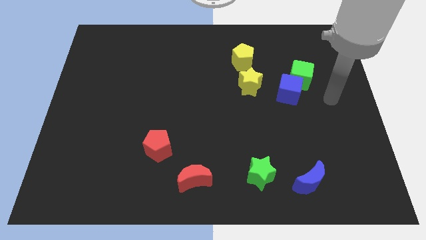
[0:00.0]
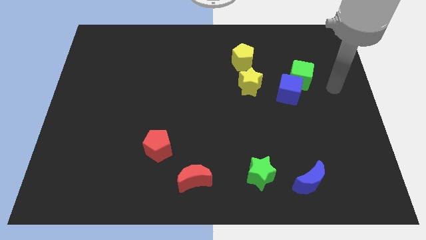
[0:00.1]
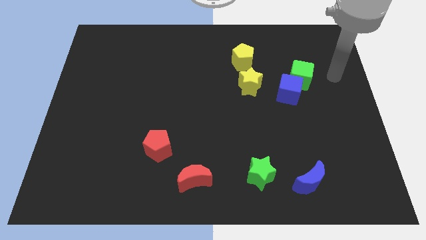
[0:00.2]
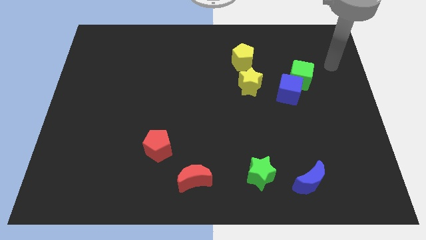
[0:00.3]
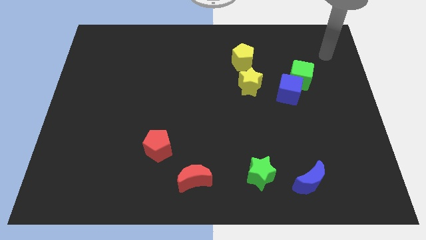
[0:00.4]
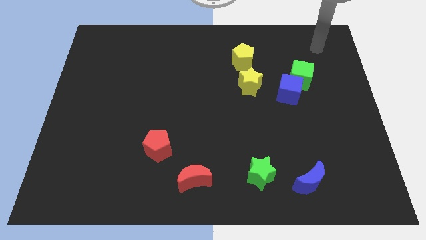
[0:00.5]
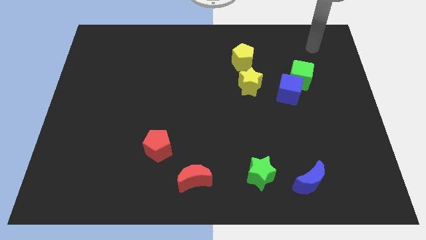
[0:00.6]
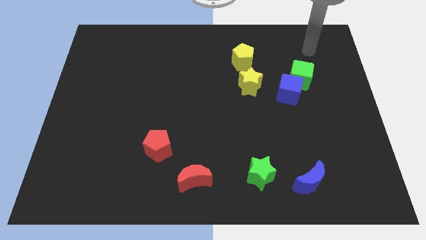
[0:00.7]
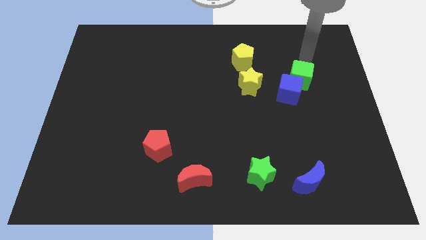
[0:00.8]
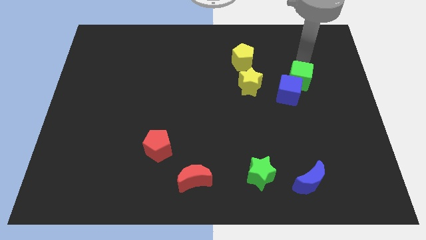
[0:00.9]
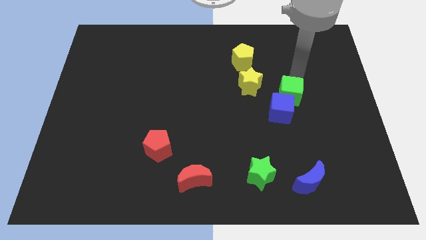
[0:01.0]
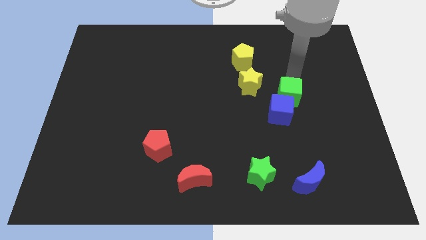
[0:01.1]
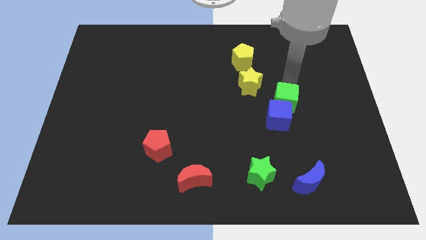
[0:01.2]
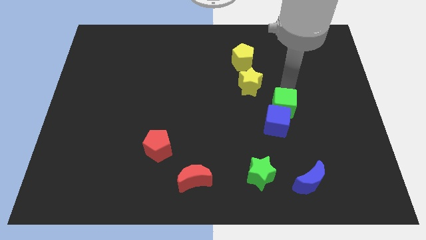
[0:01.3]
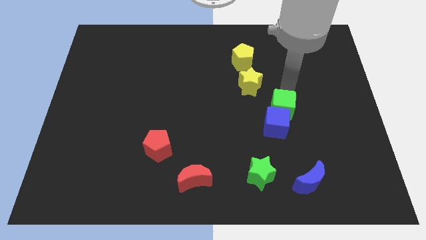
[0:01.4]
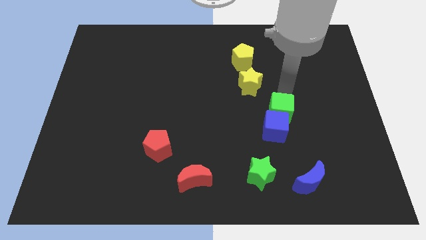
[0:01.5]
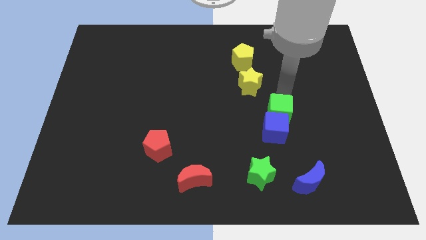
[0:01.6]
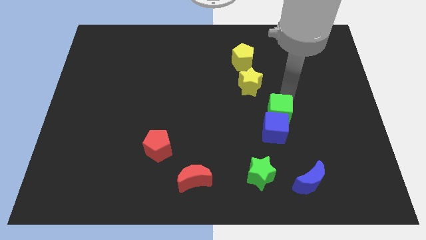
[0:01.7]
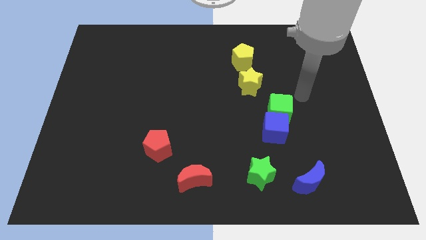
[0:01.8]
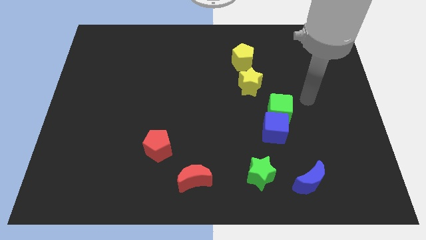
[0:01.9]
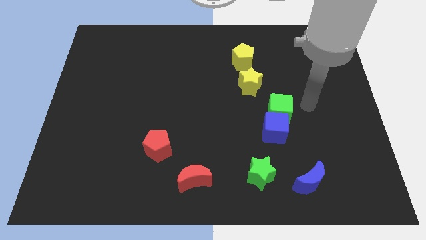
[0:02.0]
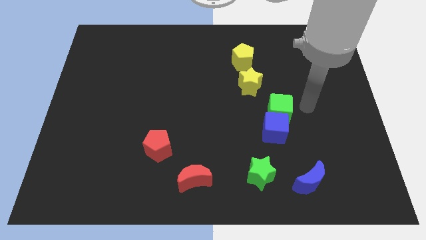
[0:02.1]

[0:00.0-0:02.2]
push green and blue cubes towards green star

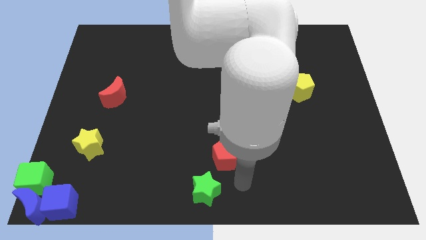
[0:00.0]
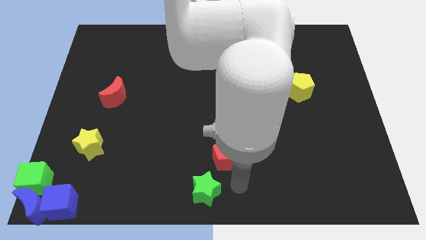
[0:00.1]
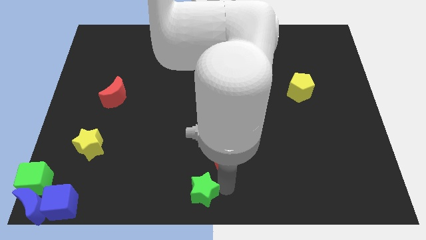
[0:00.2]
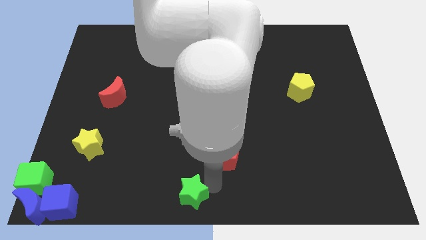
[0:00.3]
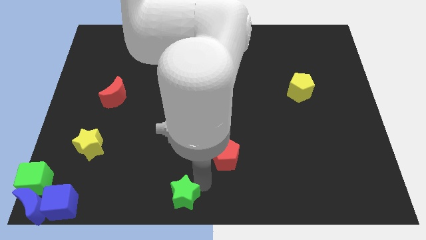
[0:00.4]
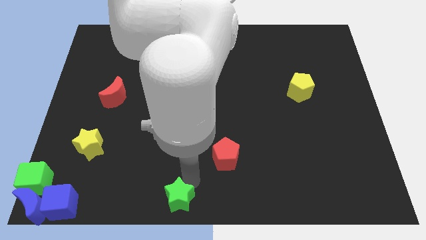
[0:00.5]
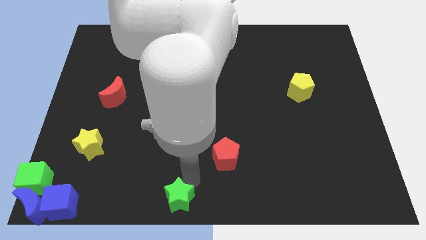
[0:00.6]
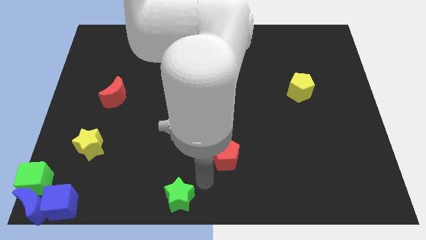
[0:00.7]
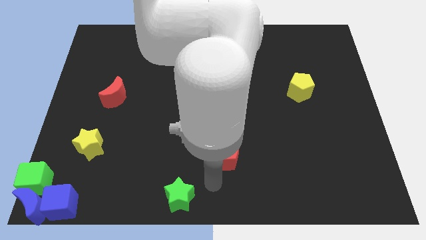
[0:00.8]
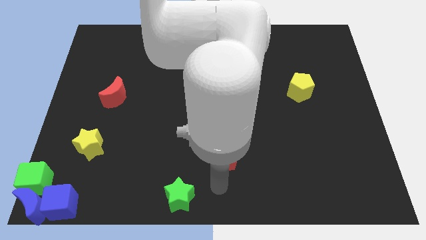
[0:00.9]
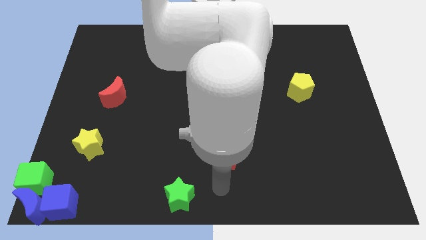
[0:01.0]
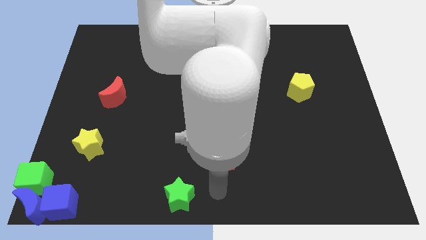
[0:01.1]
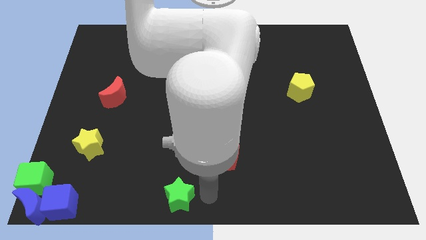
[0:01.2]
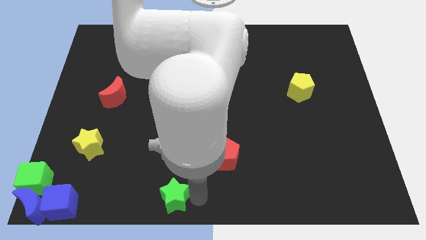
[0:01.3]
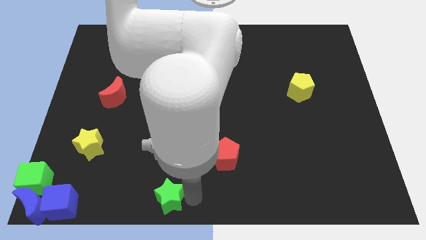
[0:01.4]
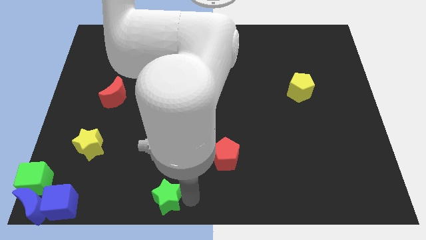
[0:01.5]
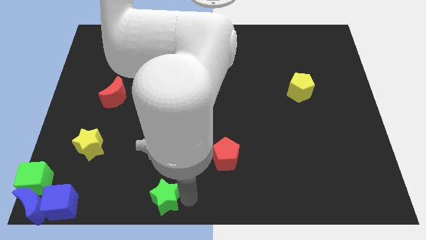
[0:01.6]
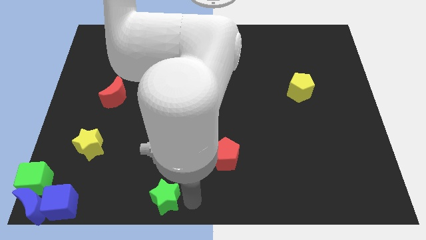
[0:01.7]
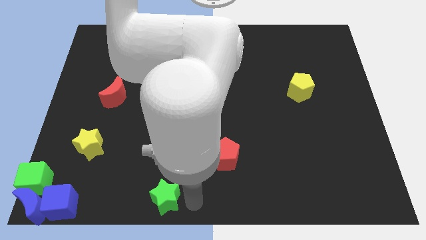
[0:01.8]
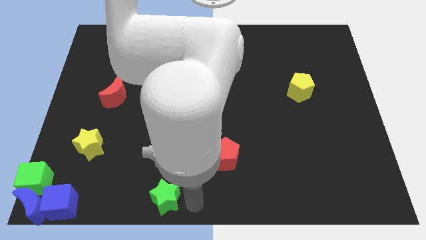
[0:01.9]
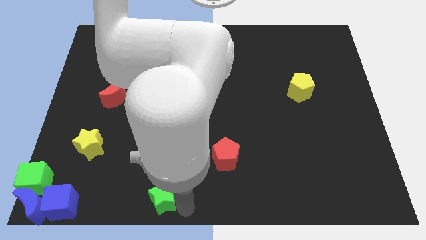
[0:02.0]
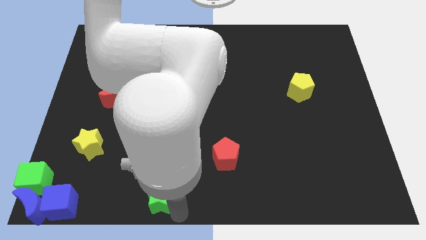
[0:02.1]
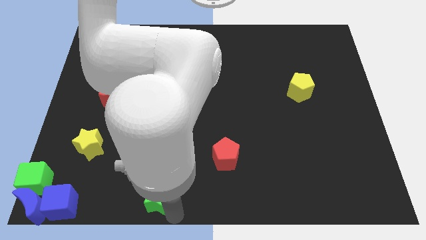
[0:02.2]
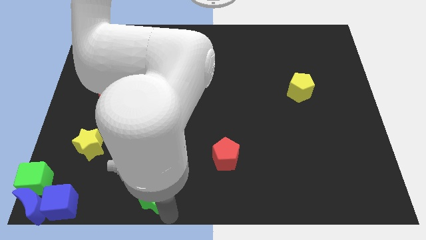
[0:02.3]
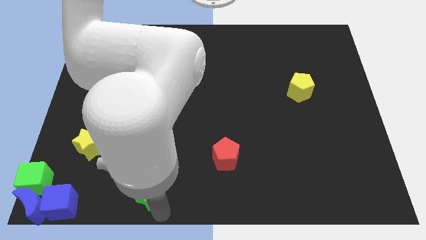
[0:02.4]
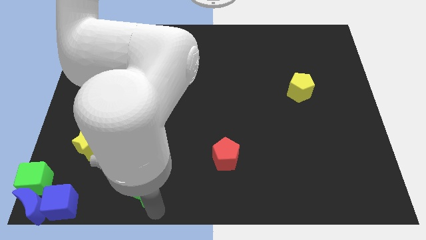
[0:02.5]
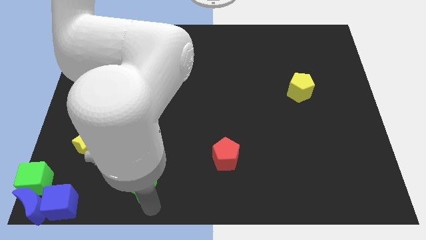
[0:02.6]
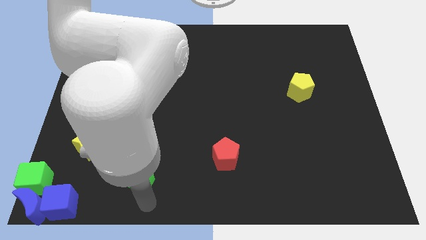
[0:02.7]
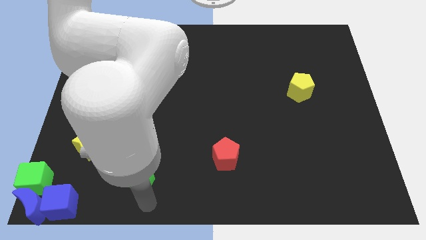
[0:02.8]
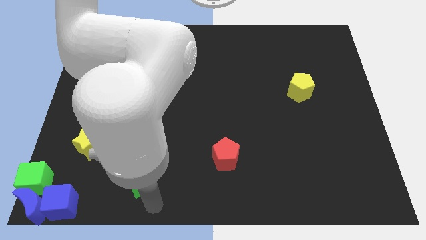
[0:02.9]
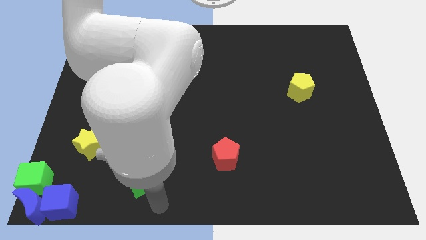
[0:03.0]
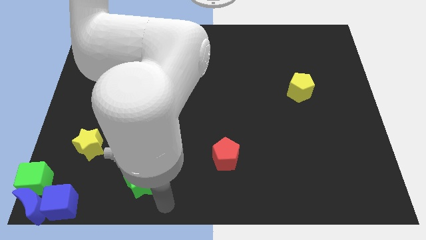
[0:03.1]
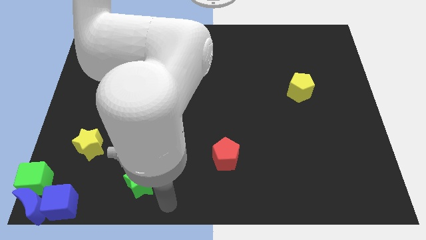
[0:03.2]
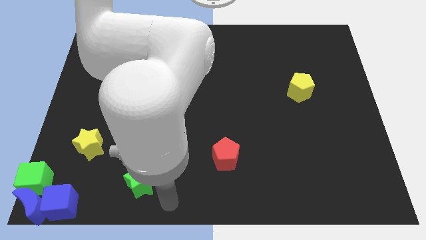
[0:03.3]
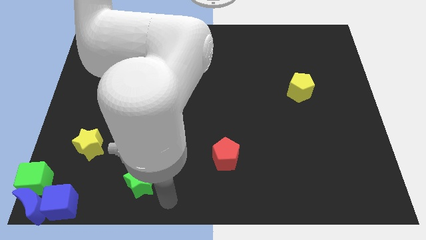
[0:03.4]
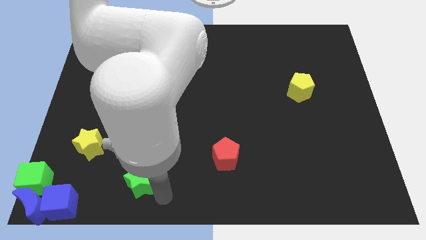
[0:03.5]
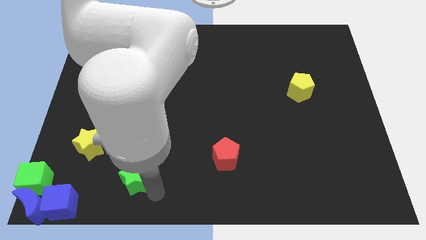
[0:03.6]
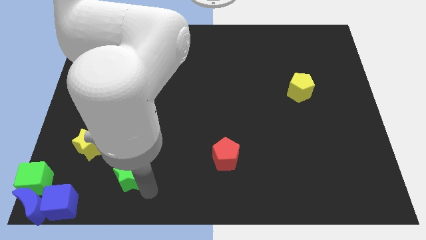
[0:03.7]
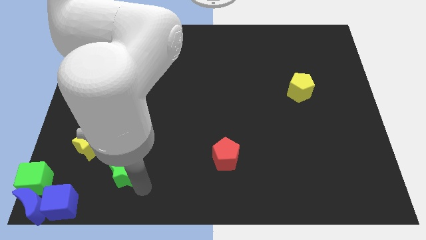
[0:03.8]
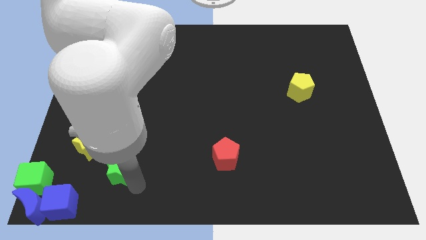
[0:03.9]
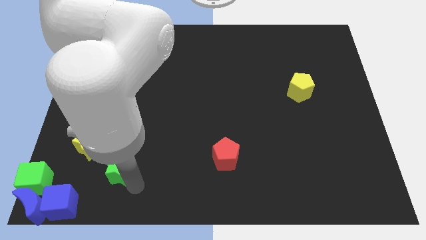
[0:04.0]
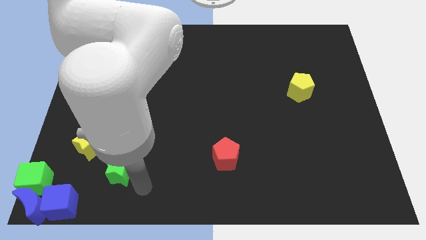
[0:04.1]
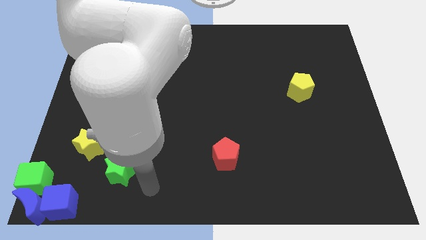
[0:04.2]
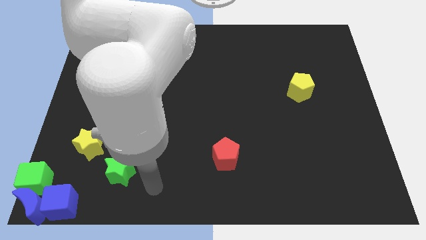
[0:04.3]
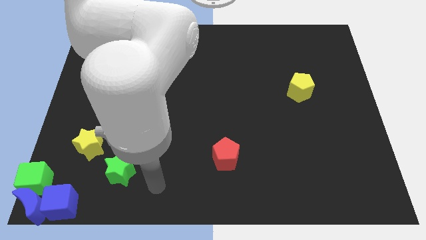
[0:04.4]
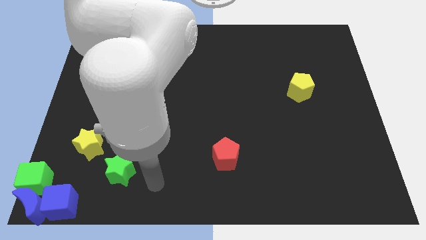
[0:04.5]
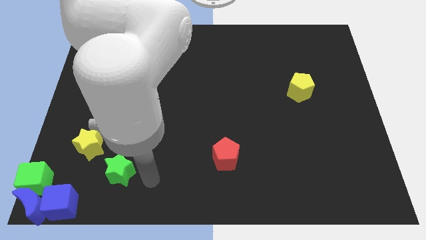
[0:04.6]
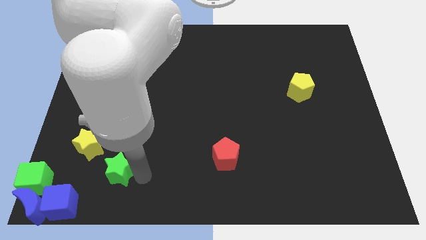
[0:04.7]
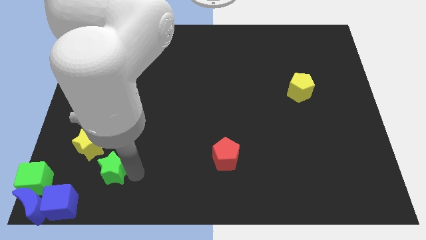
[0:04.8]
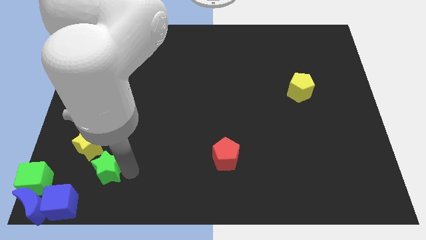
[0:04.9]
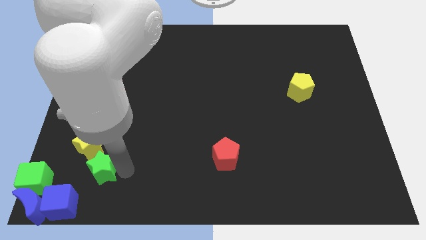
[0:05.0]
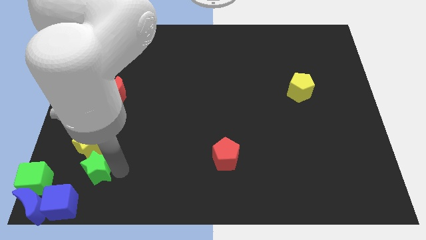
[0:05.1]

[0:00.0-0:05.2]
place the green star below the yellow star

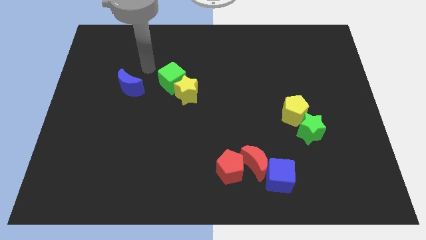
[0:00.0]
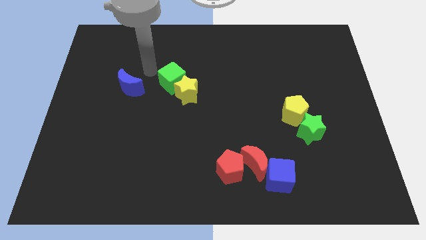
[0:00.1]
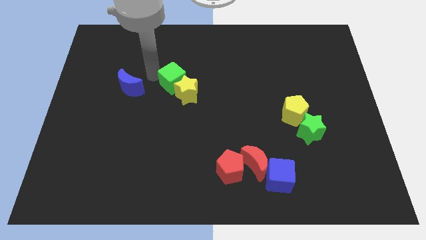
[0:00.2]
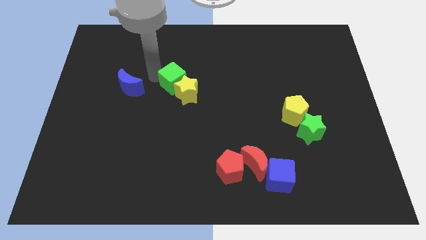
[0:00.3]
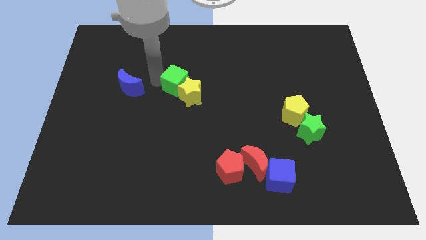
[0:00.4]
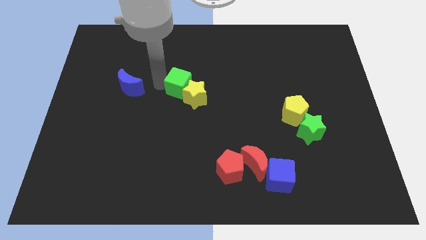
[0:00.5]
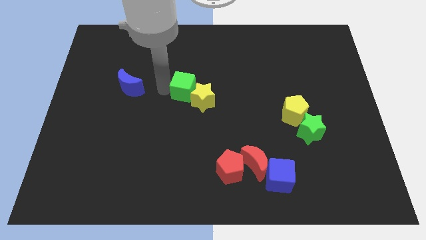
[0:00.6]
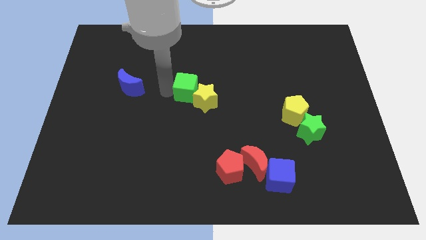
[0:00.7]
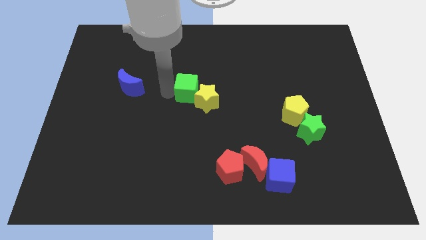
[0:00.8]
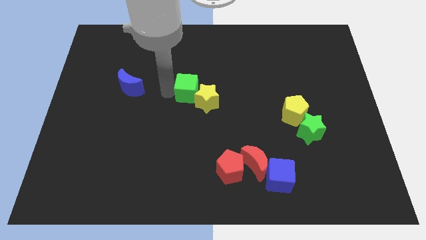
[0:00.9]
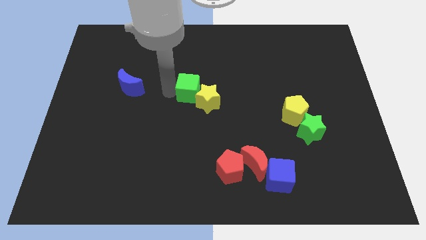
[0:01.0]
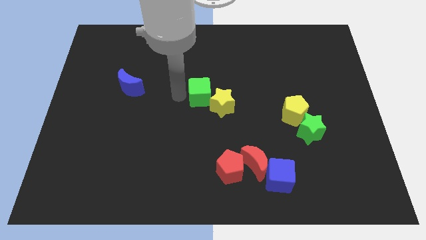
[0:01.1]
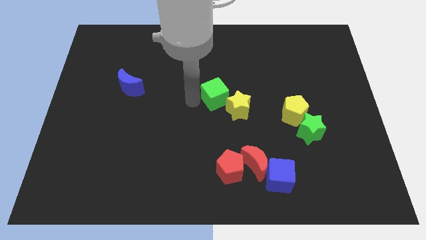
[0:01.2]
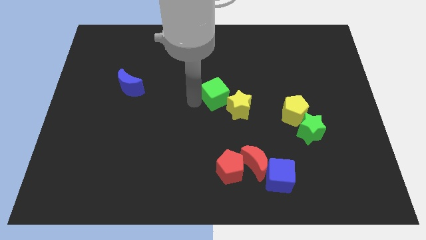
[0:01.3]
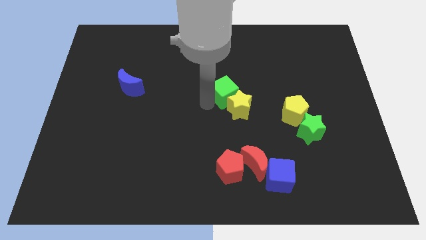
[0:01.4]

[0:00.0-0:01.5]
move the green cube and the yellow star towards the center of the board
